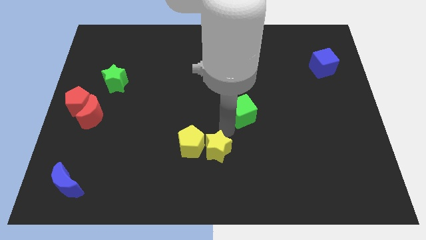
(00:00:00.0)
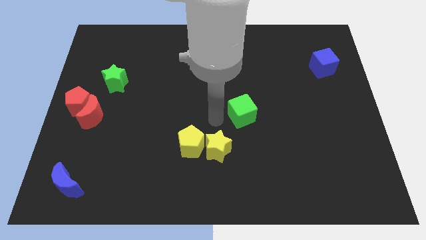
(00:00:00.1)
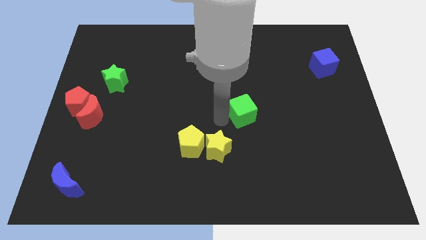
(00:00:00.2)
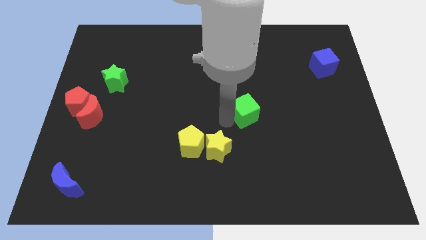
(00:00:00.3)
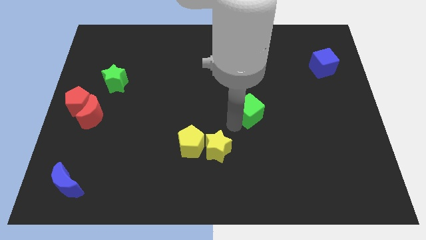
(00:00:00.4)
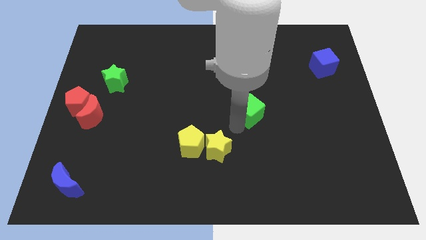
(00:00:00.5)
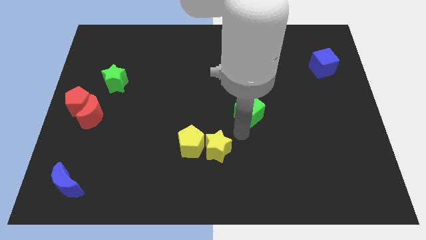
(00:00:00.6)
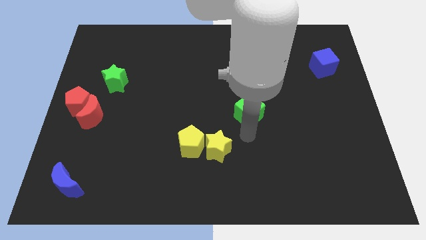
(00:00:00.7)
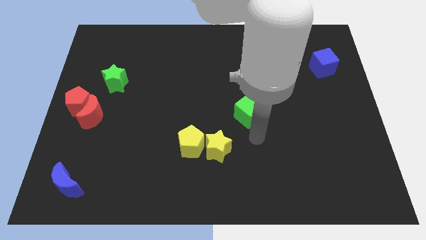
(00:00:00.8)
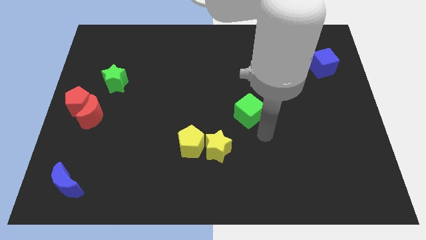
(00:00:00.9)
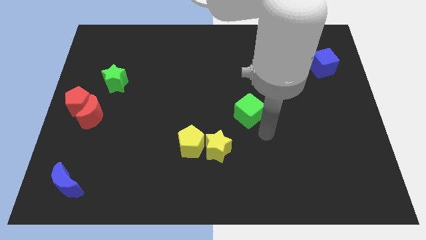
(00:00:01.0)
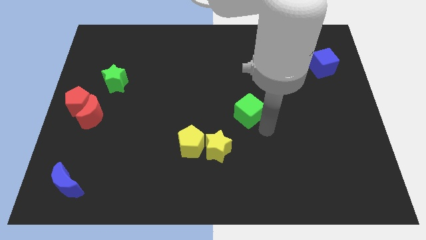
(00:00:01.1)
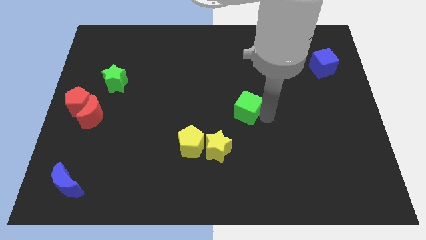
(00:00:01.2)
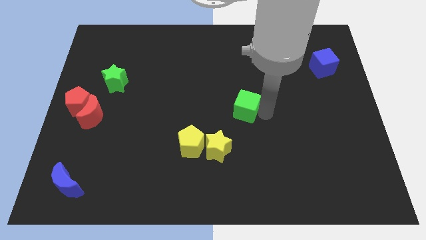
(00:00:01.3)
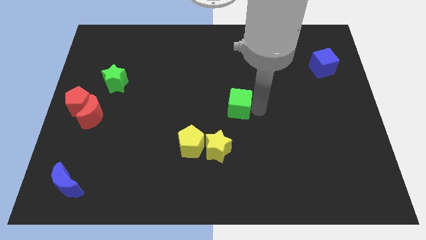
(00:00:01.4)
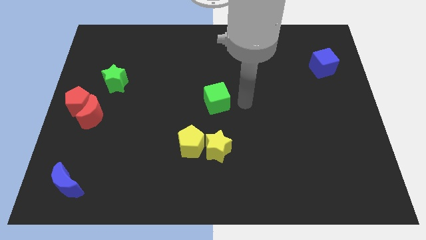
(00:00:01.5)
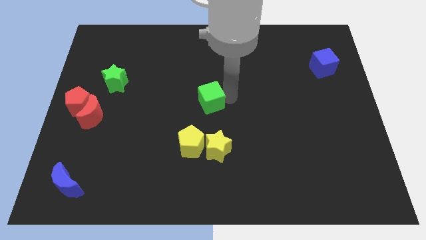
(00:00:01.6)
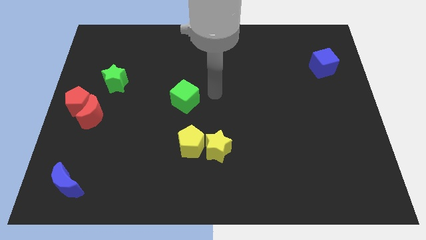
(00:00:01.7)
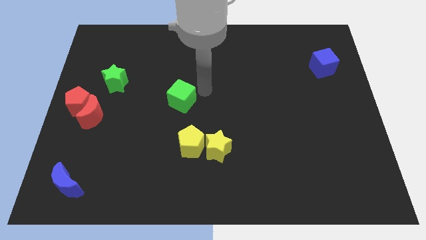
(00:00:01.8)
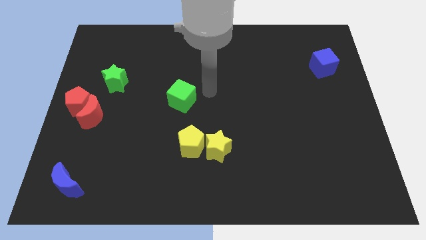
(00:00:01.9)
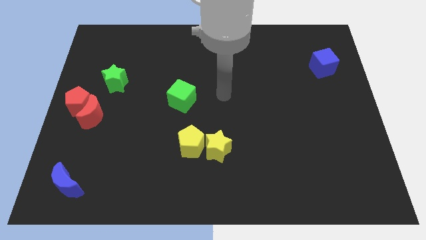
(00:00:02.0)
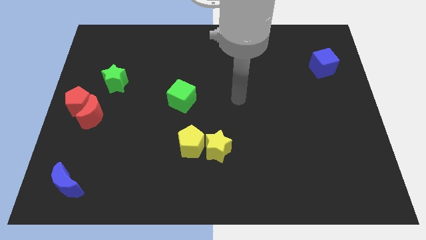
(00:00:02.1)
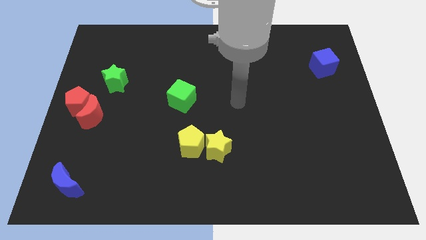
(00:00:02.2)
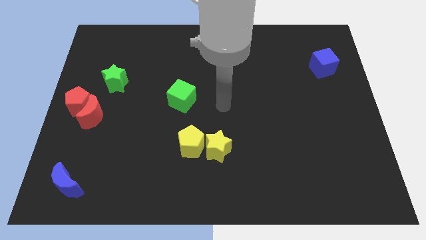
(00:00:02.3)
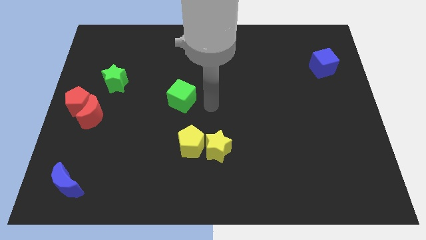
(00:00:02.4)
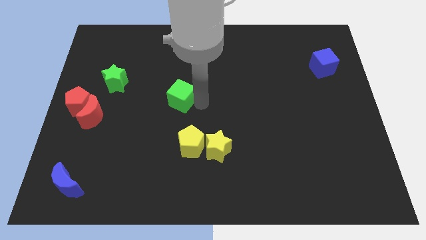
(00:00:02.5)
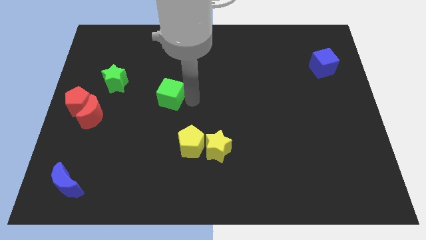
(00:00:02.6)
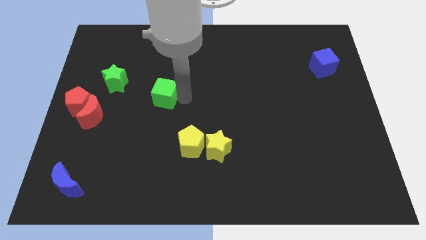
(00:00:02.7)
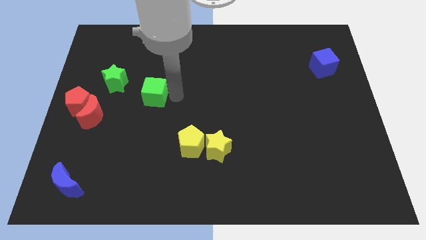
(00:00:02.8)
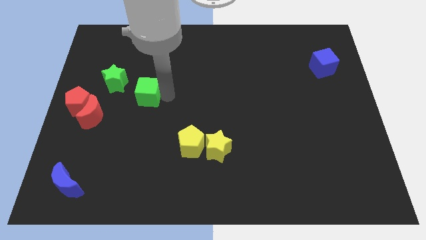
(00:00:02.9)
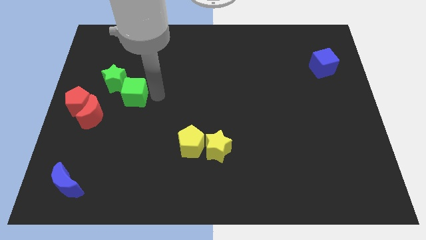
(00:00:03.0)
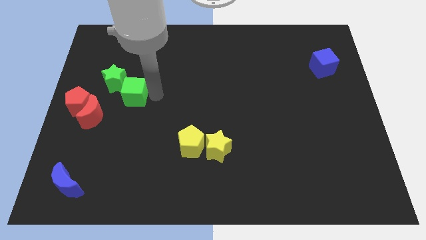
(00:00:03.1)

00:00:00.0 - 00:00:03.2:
push the green cube towards the green star

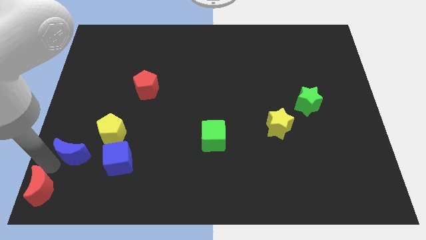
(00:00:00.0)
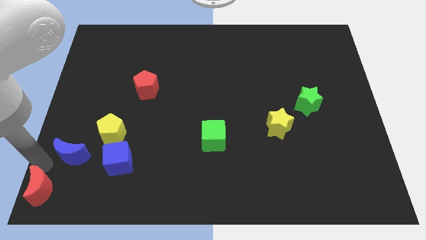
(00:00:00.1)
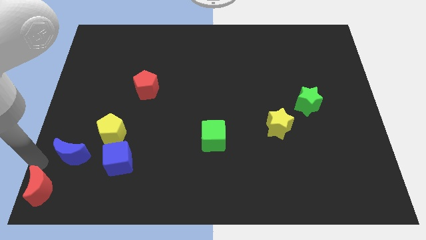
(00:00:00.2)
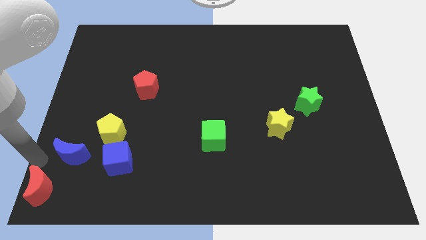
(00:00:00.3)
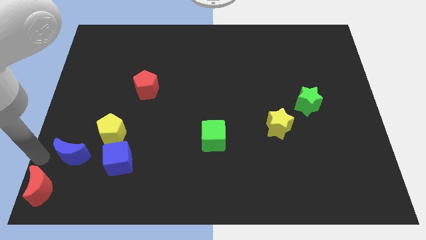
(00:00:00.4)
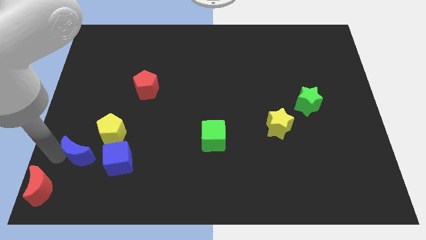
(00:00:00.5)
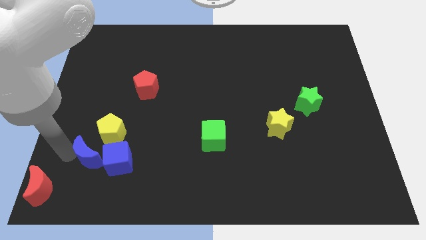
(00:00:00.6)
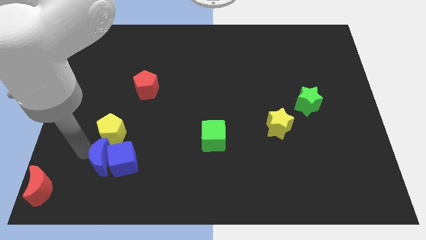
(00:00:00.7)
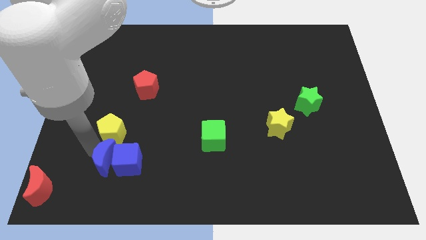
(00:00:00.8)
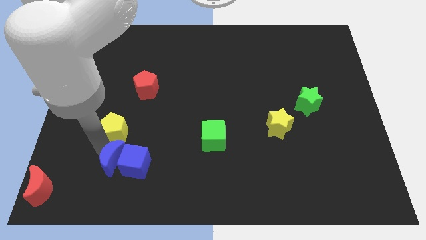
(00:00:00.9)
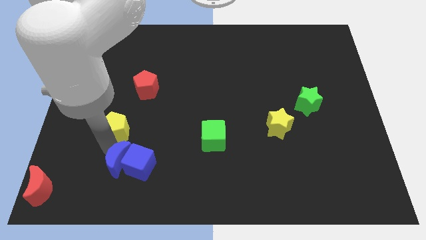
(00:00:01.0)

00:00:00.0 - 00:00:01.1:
push the blue crescent into the blue cube

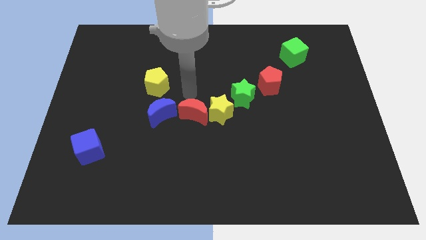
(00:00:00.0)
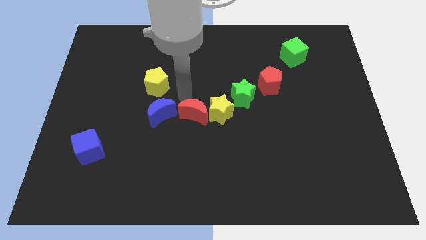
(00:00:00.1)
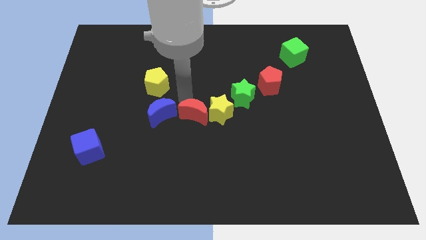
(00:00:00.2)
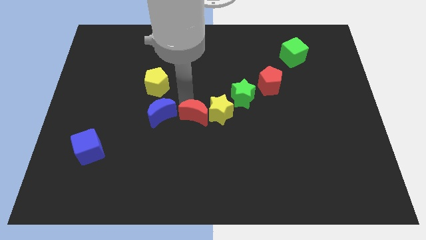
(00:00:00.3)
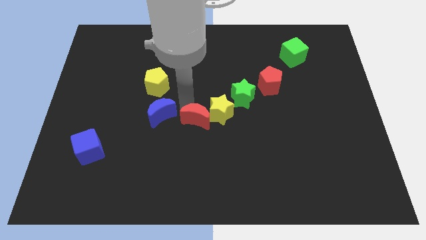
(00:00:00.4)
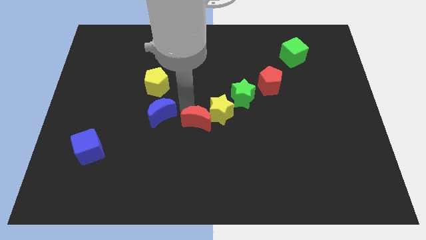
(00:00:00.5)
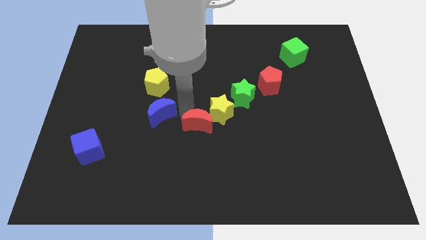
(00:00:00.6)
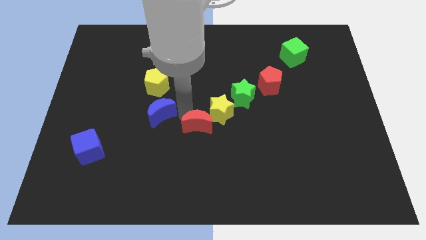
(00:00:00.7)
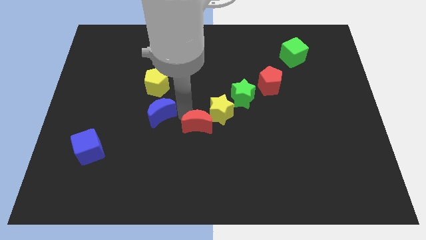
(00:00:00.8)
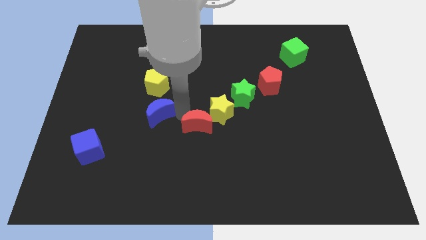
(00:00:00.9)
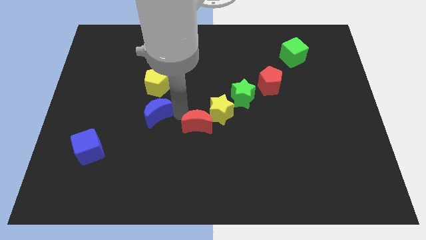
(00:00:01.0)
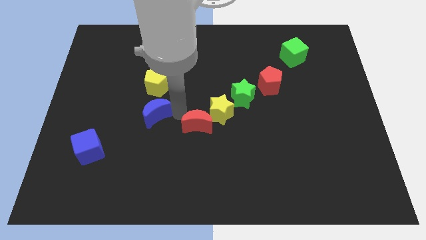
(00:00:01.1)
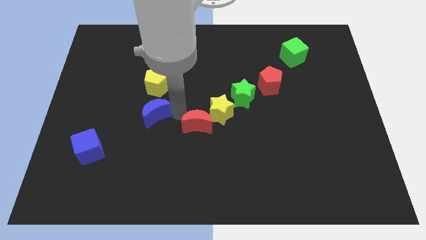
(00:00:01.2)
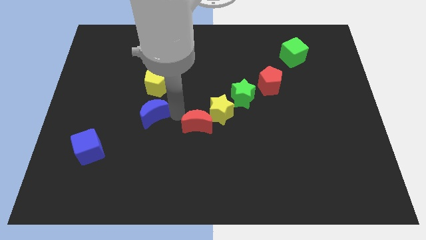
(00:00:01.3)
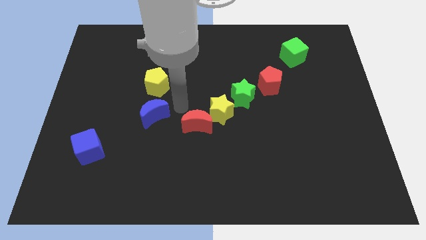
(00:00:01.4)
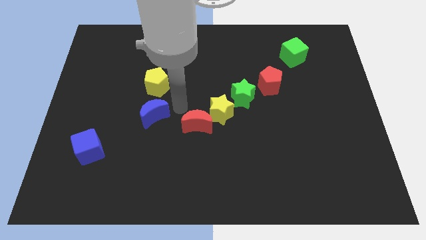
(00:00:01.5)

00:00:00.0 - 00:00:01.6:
separate the red crescent and blue crescent from each other

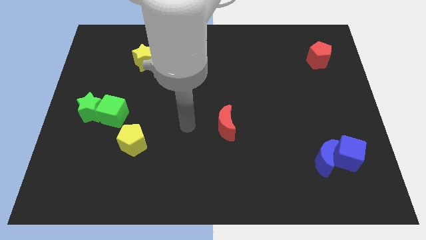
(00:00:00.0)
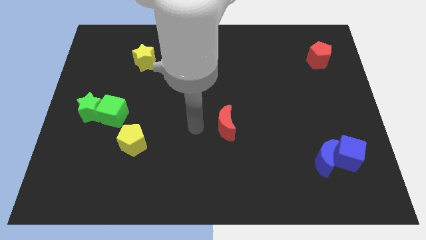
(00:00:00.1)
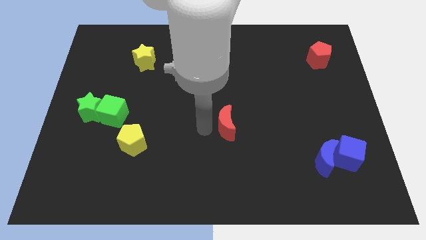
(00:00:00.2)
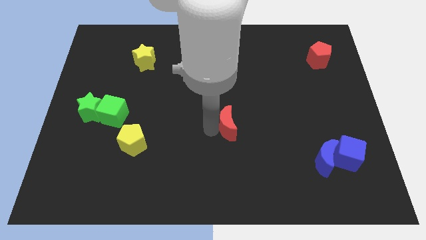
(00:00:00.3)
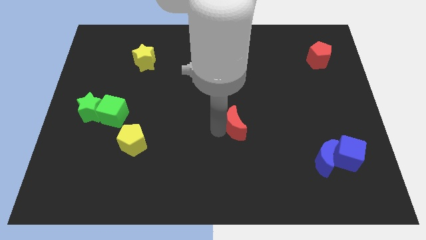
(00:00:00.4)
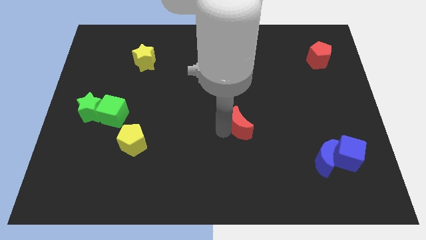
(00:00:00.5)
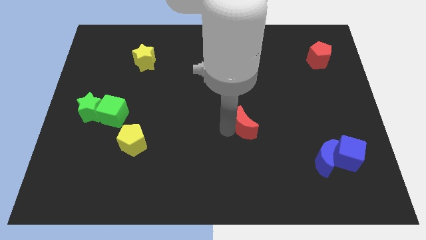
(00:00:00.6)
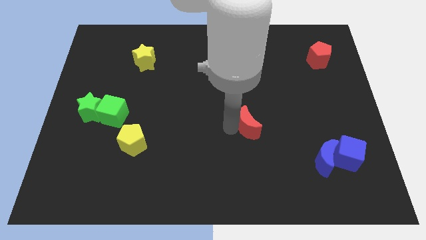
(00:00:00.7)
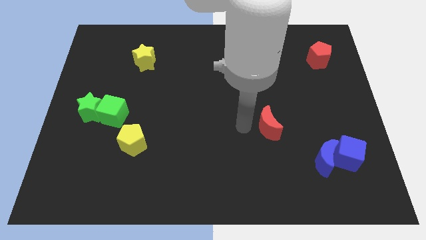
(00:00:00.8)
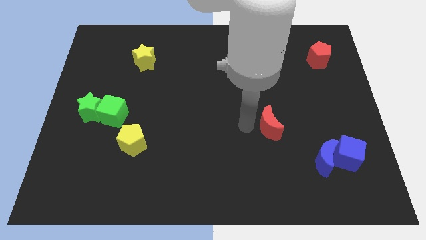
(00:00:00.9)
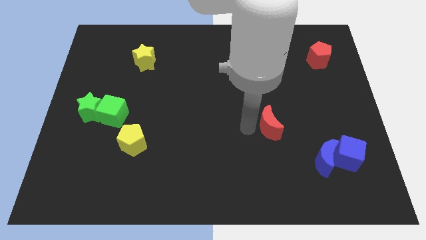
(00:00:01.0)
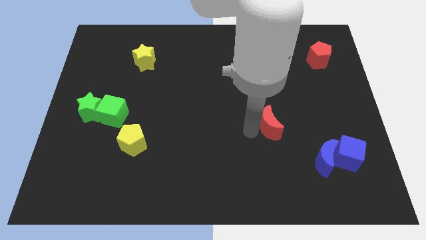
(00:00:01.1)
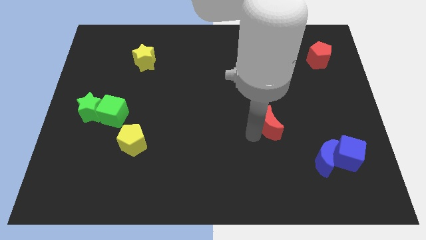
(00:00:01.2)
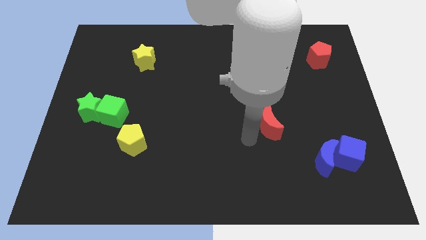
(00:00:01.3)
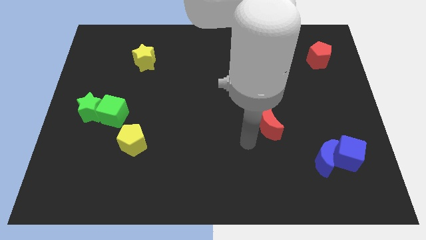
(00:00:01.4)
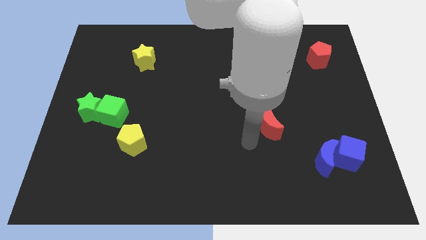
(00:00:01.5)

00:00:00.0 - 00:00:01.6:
push the red crescent to the right

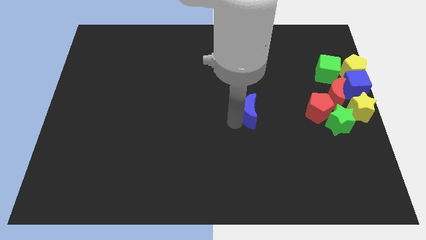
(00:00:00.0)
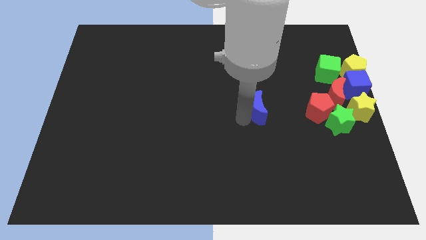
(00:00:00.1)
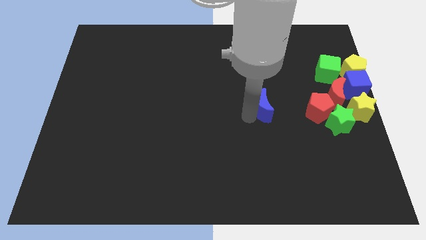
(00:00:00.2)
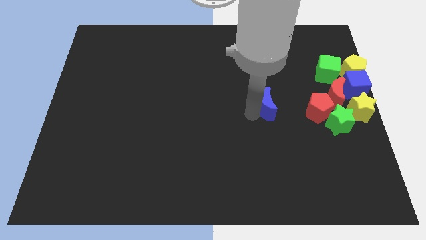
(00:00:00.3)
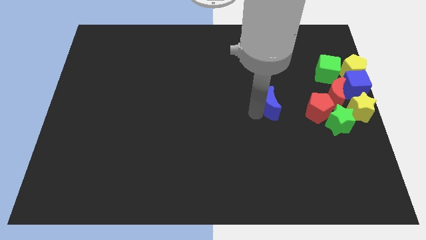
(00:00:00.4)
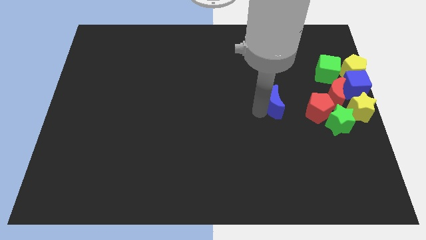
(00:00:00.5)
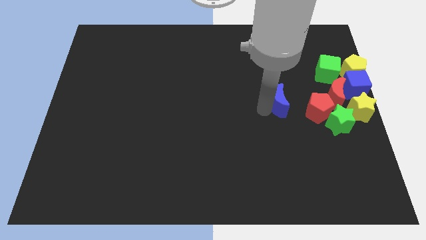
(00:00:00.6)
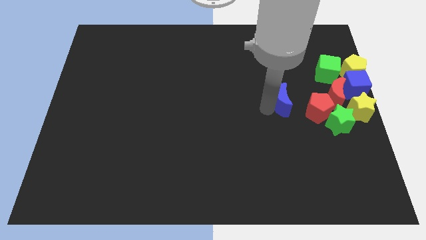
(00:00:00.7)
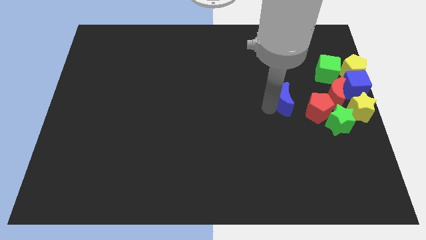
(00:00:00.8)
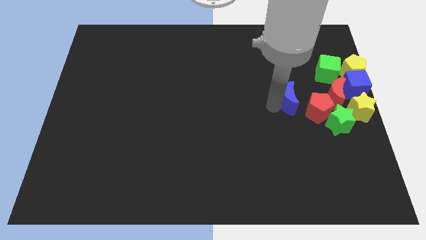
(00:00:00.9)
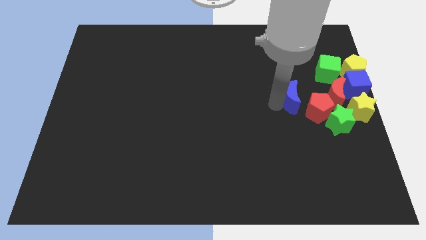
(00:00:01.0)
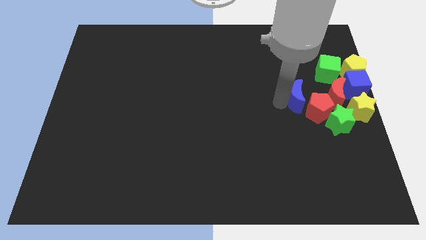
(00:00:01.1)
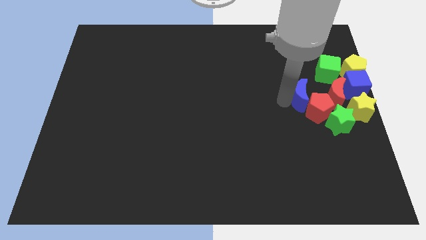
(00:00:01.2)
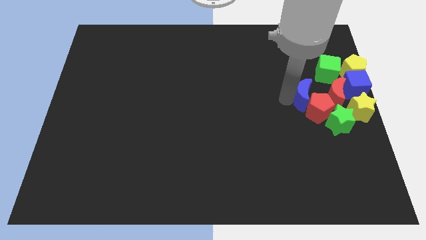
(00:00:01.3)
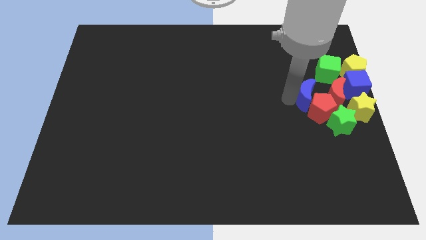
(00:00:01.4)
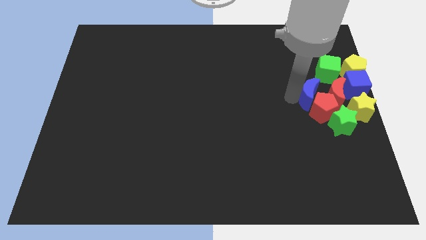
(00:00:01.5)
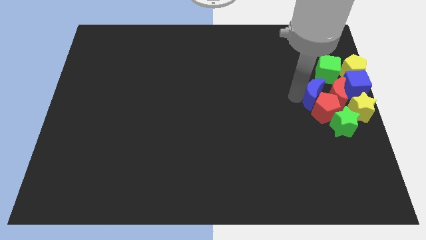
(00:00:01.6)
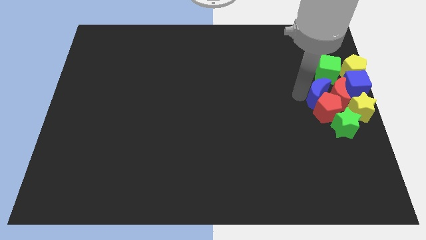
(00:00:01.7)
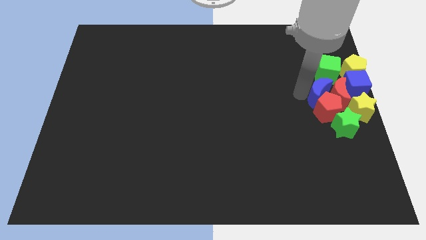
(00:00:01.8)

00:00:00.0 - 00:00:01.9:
push blue crescent into the group of blocks
